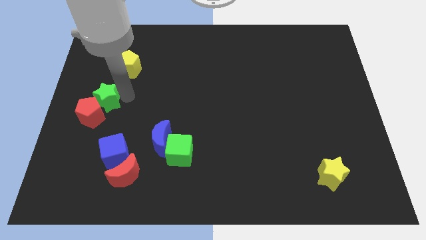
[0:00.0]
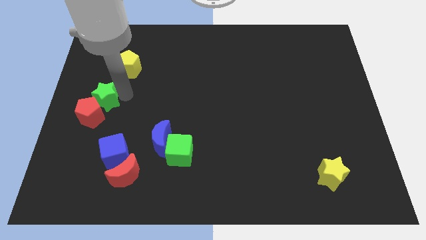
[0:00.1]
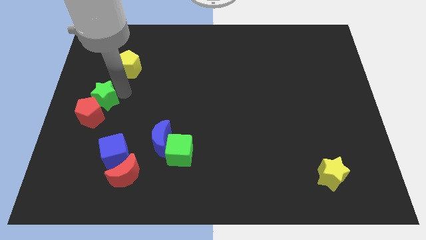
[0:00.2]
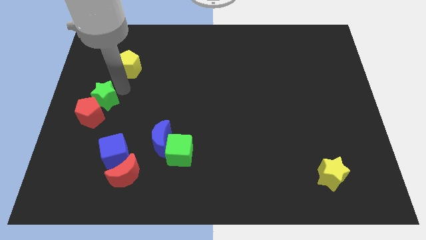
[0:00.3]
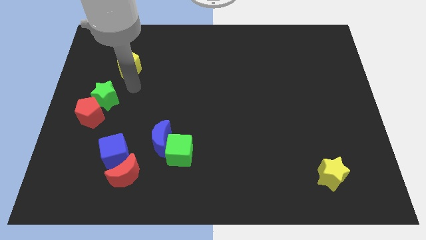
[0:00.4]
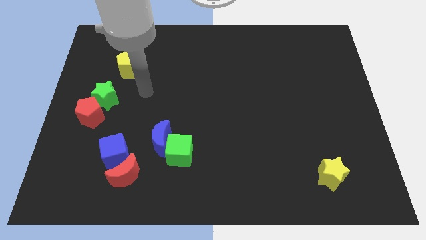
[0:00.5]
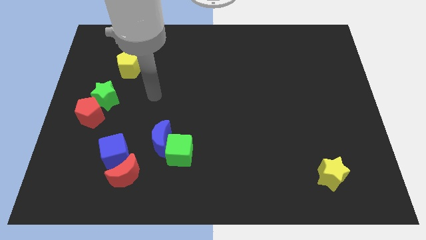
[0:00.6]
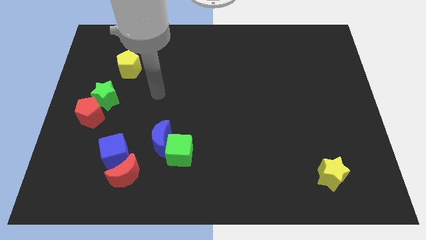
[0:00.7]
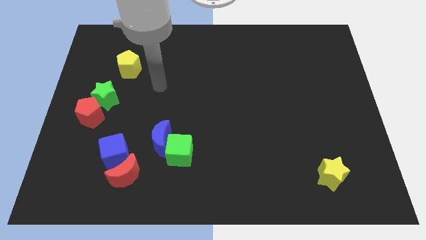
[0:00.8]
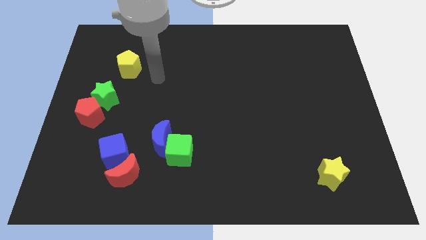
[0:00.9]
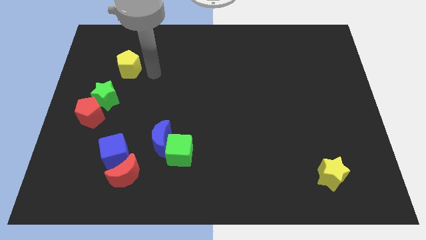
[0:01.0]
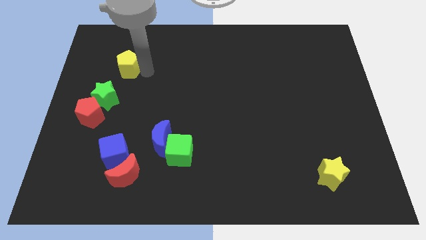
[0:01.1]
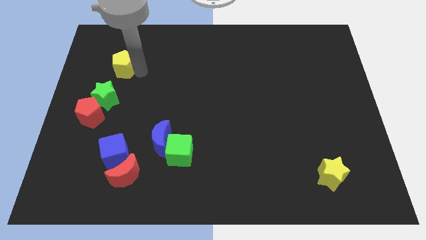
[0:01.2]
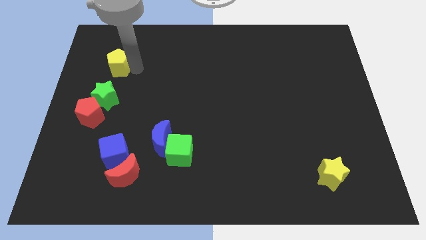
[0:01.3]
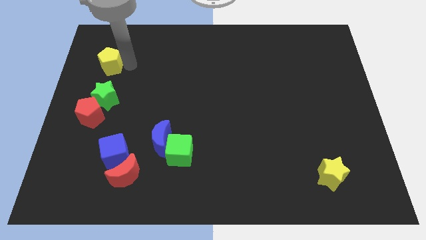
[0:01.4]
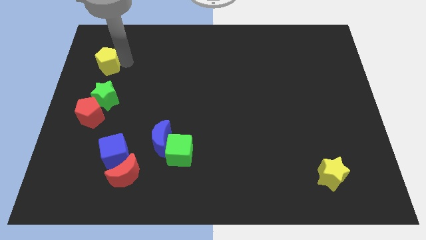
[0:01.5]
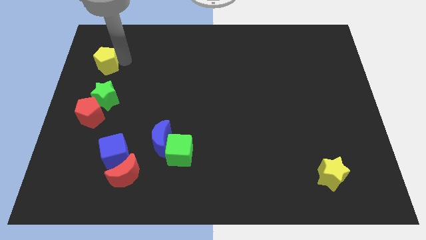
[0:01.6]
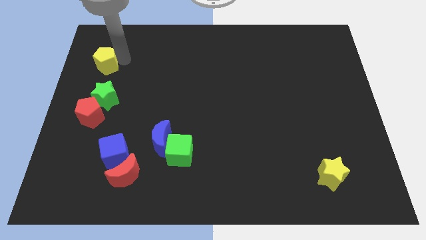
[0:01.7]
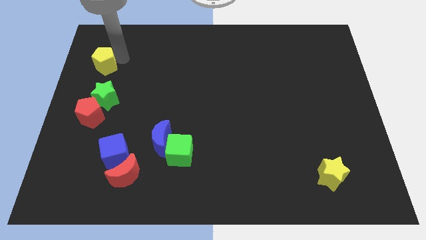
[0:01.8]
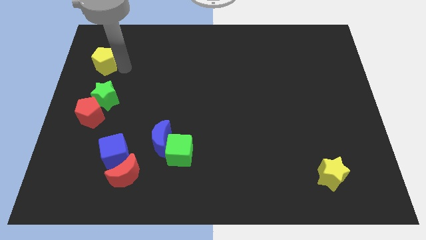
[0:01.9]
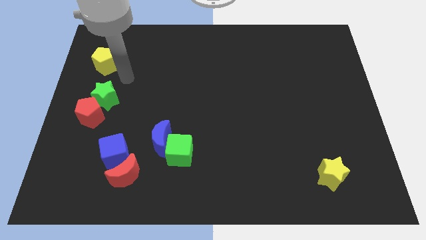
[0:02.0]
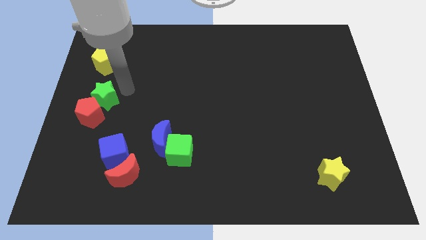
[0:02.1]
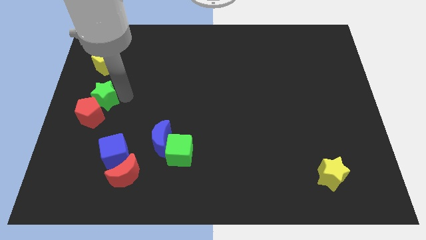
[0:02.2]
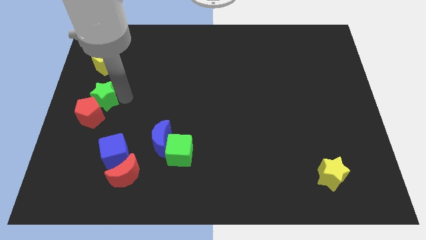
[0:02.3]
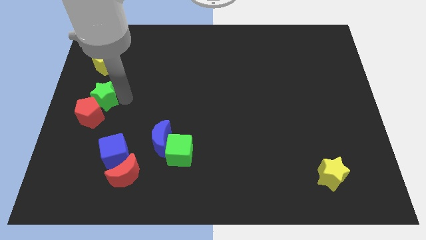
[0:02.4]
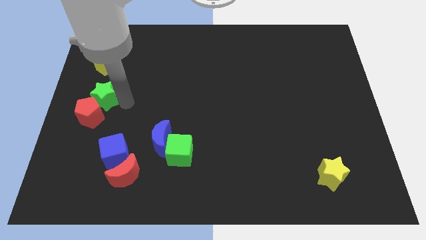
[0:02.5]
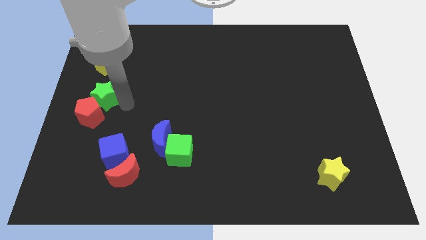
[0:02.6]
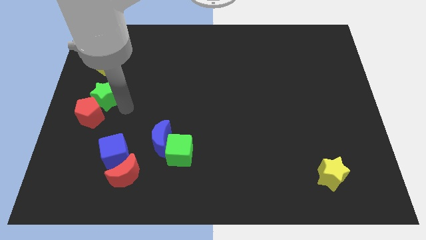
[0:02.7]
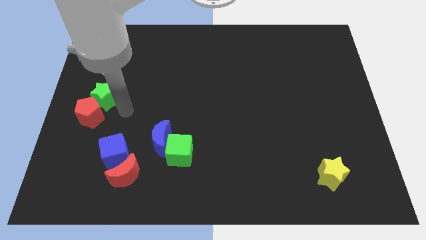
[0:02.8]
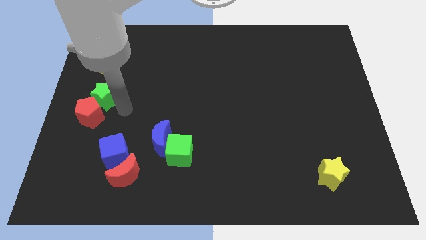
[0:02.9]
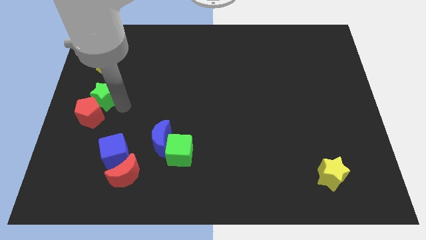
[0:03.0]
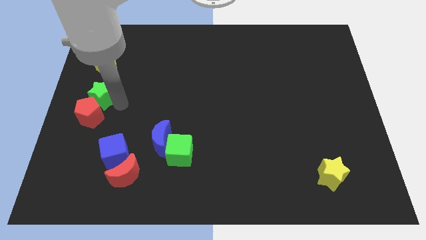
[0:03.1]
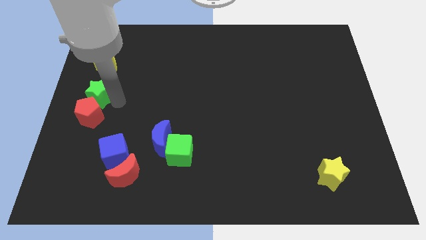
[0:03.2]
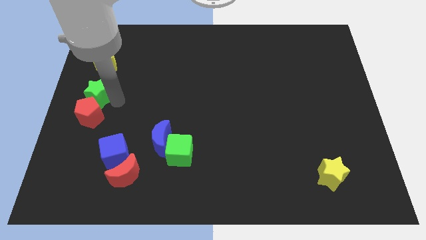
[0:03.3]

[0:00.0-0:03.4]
slightly push the yellow pentagon towards the left to the board

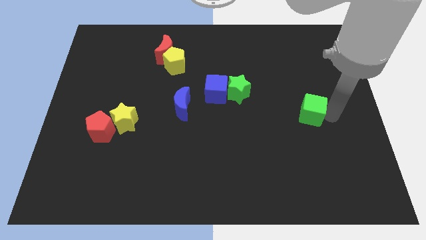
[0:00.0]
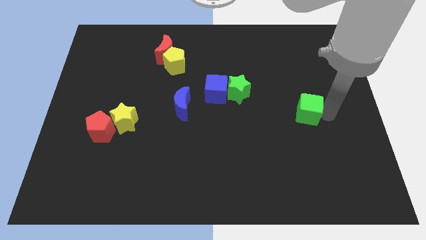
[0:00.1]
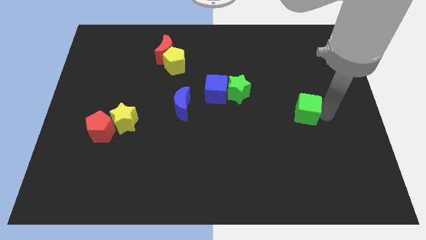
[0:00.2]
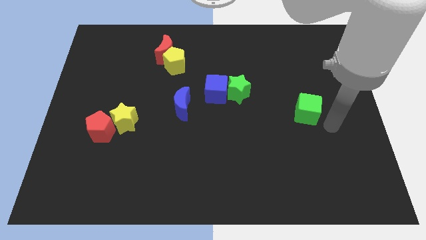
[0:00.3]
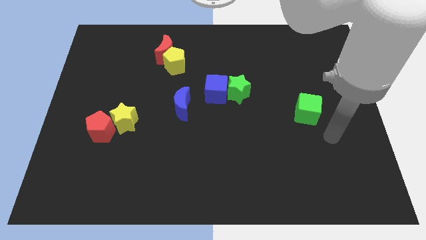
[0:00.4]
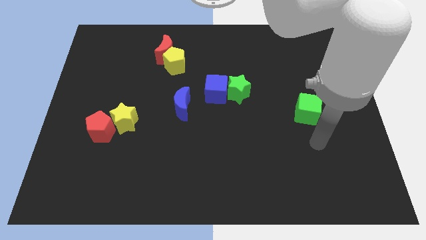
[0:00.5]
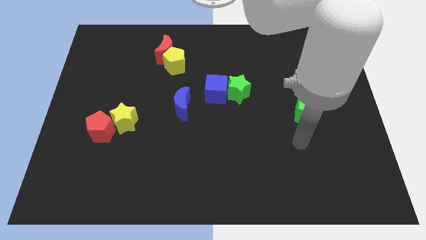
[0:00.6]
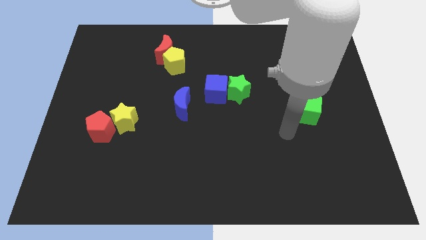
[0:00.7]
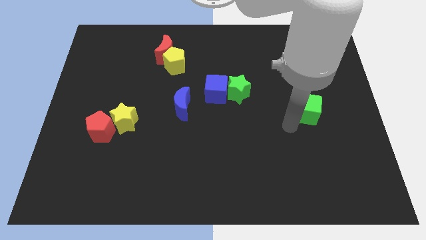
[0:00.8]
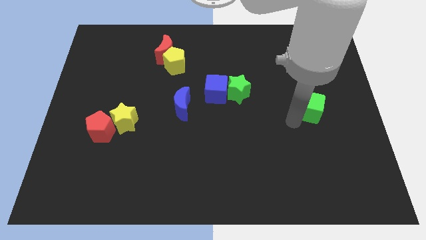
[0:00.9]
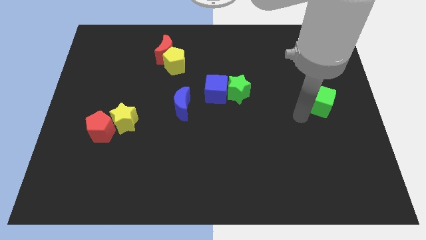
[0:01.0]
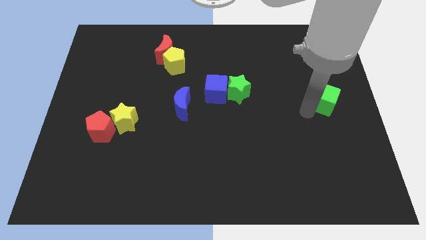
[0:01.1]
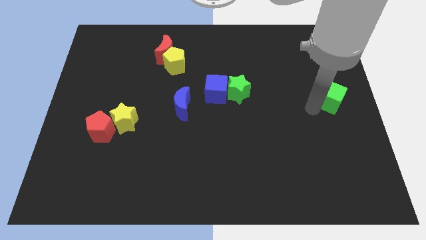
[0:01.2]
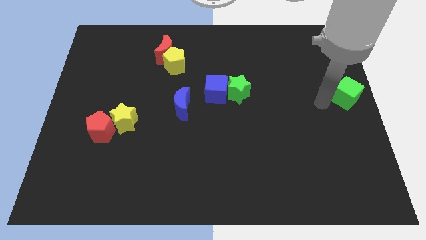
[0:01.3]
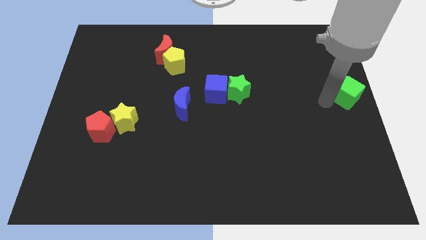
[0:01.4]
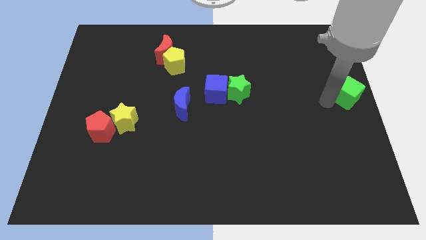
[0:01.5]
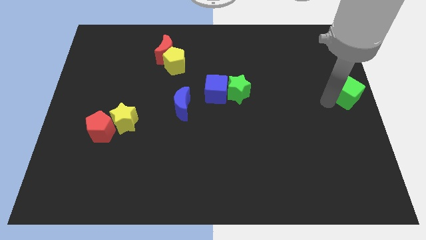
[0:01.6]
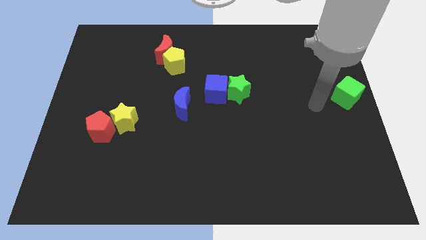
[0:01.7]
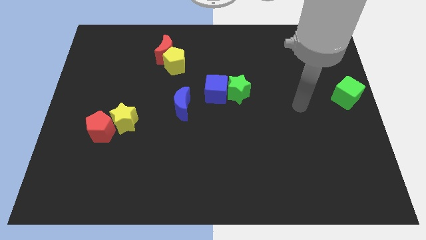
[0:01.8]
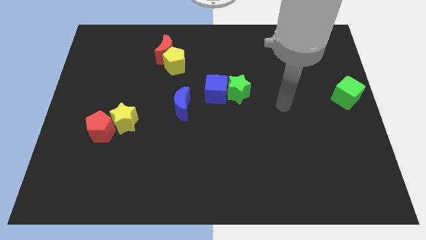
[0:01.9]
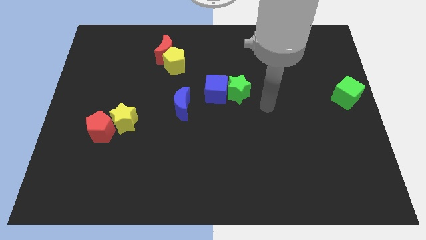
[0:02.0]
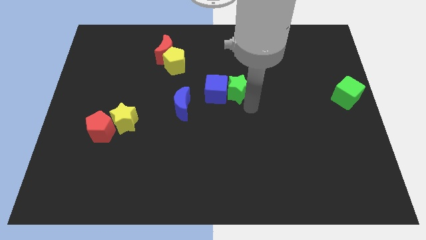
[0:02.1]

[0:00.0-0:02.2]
push the green cube to the right center of the board

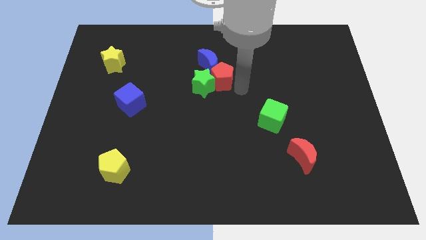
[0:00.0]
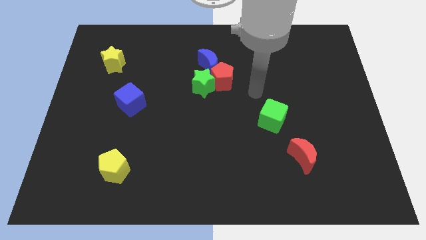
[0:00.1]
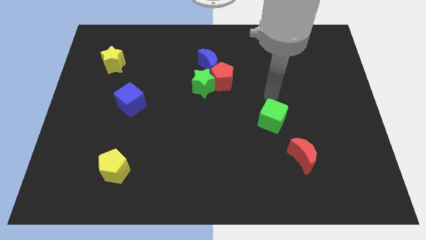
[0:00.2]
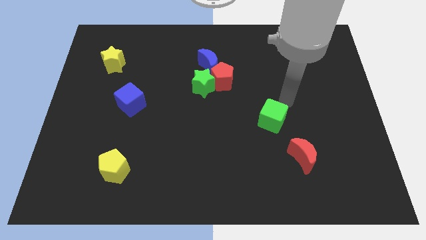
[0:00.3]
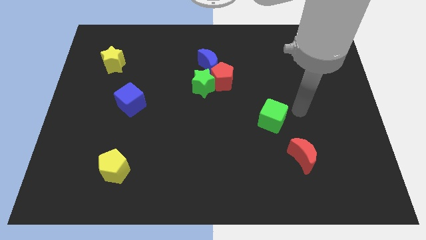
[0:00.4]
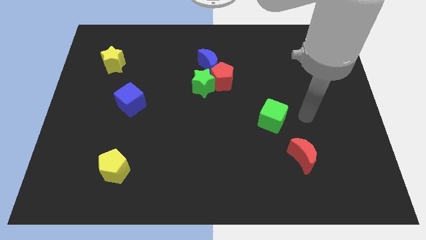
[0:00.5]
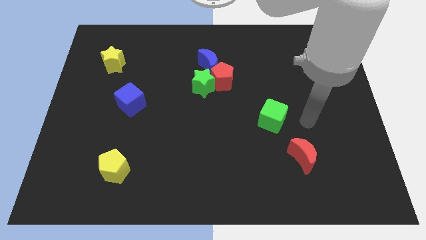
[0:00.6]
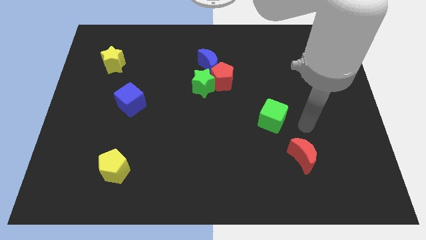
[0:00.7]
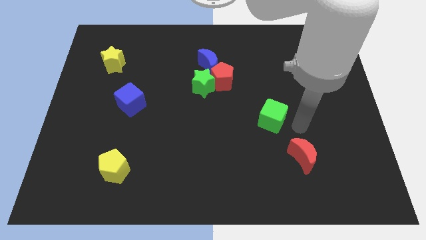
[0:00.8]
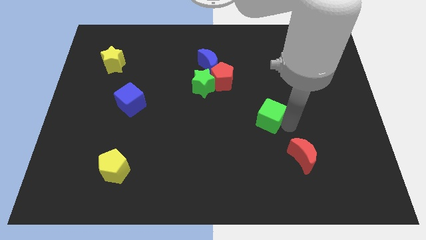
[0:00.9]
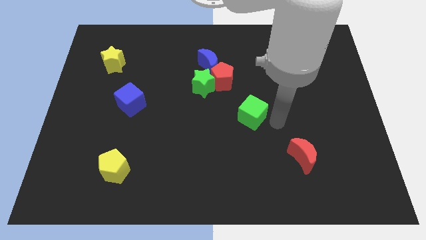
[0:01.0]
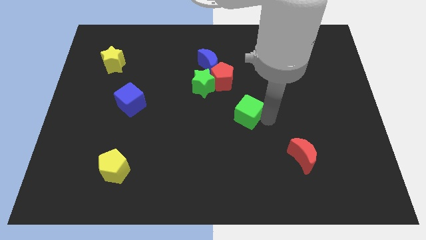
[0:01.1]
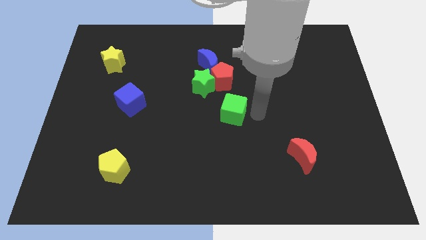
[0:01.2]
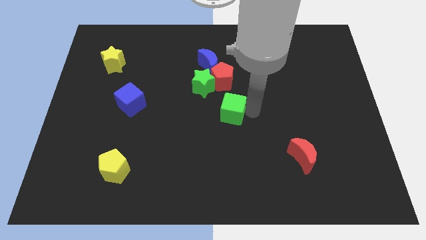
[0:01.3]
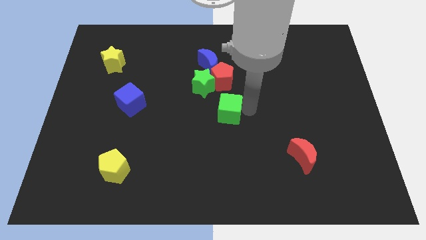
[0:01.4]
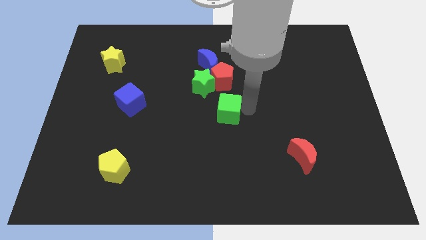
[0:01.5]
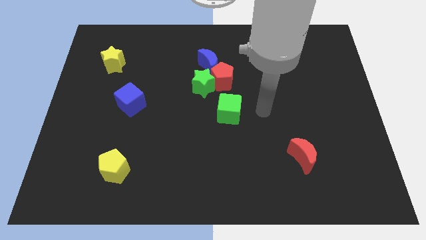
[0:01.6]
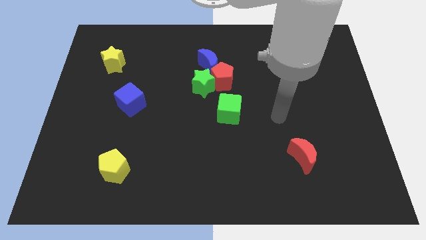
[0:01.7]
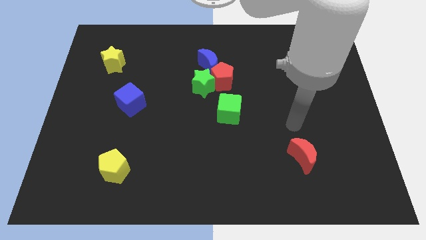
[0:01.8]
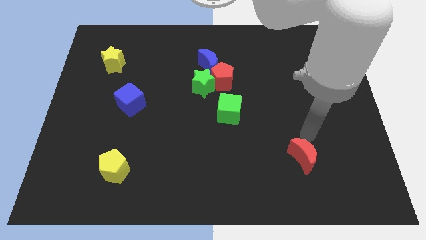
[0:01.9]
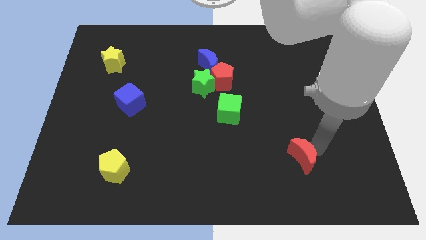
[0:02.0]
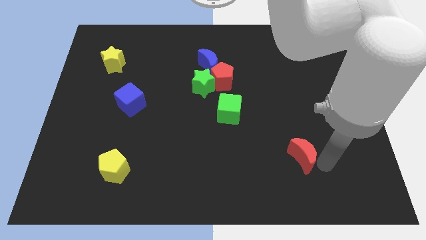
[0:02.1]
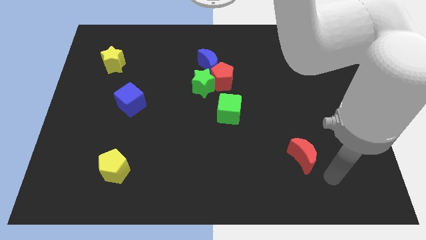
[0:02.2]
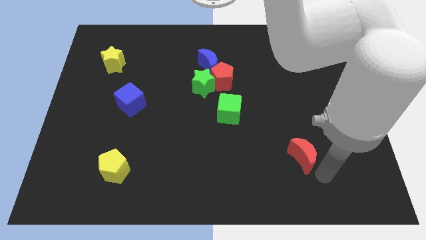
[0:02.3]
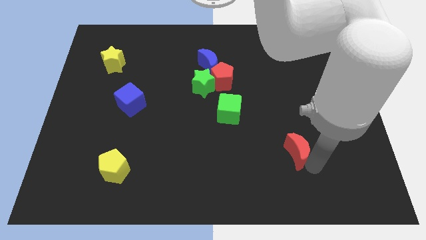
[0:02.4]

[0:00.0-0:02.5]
place the green cube at the center of the board

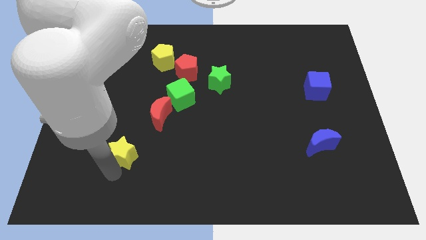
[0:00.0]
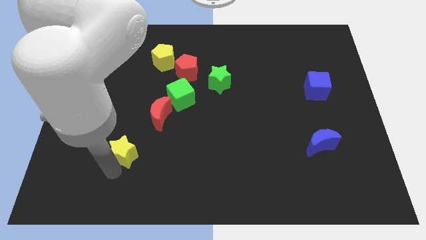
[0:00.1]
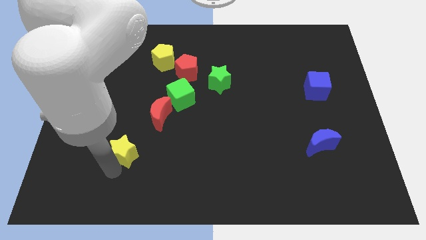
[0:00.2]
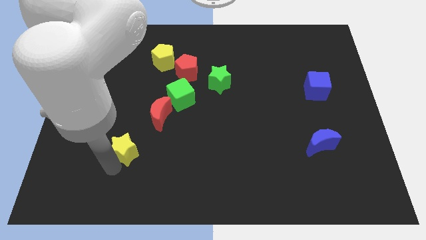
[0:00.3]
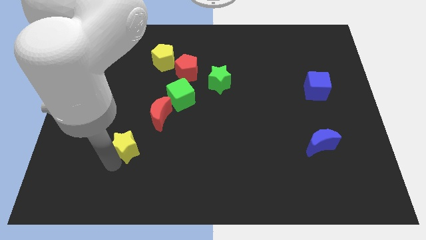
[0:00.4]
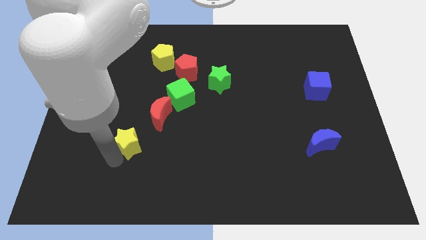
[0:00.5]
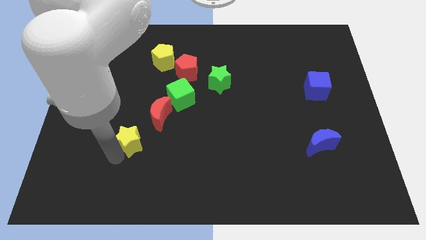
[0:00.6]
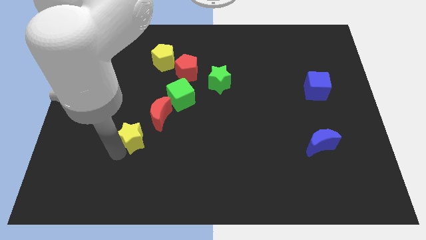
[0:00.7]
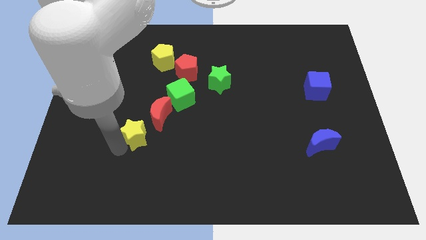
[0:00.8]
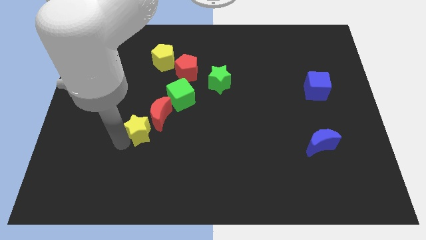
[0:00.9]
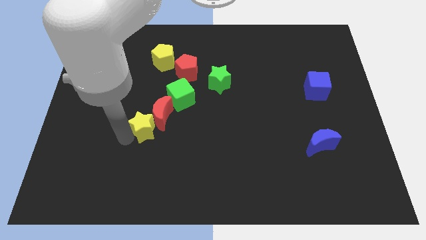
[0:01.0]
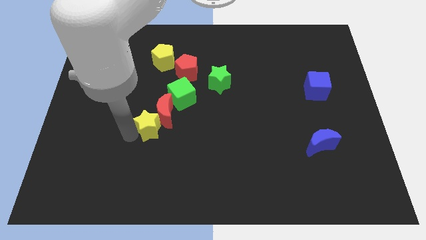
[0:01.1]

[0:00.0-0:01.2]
push yellow star in to red crescent
